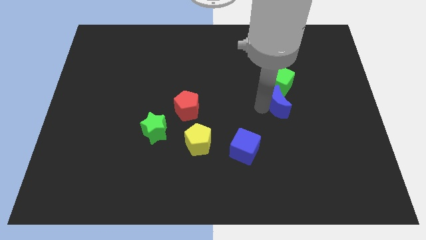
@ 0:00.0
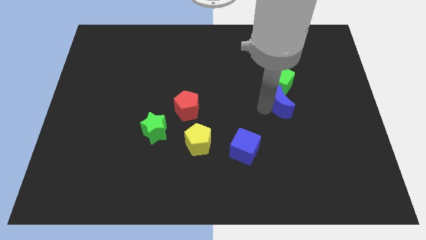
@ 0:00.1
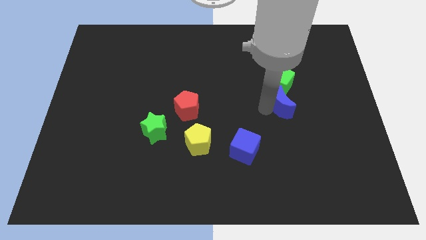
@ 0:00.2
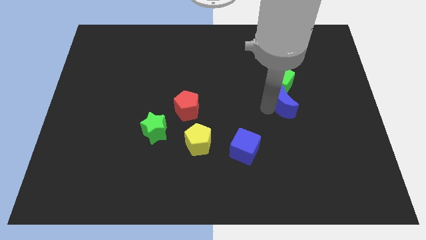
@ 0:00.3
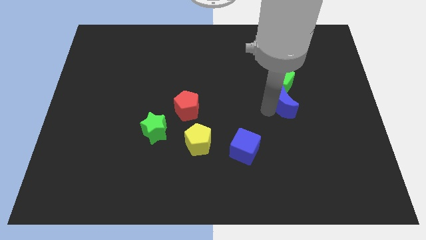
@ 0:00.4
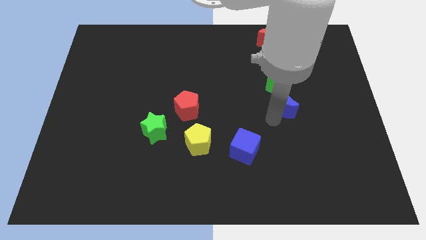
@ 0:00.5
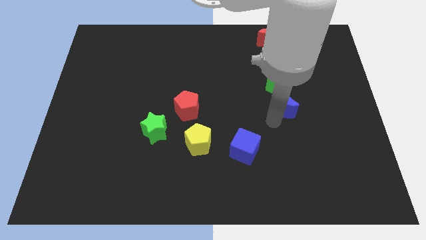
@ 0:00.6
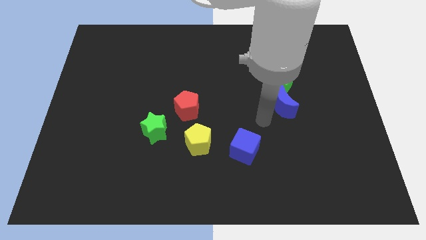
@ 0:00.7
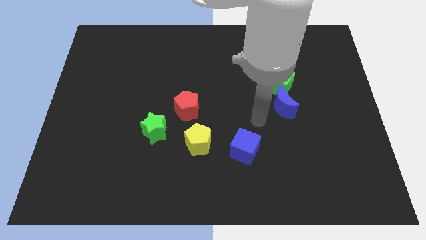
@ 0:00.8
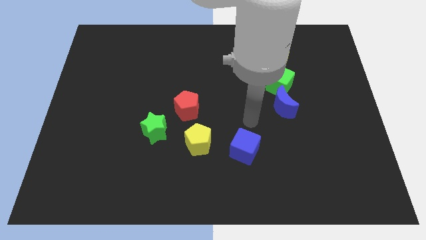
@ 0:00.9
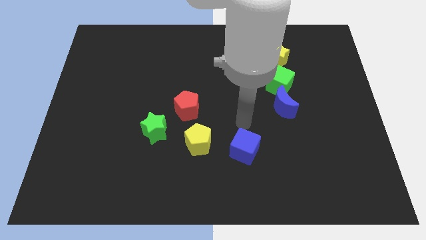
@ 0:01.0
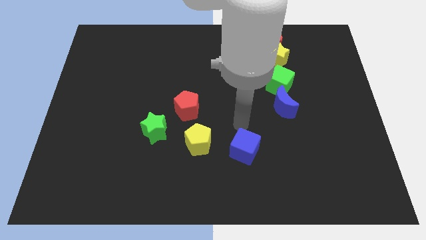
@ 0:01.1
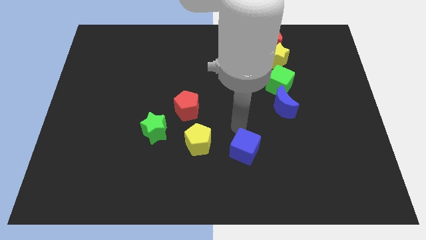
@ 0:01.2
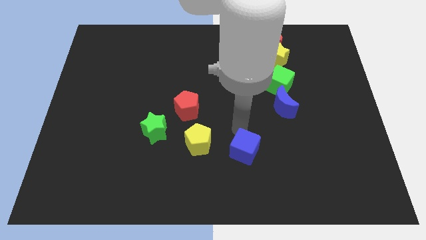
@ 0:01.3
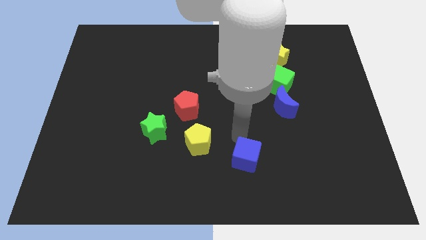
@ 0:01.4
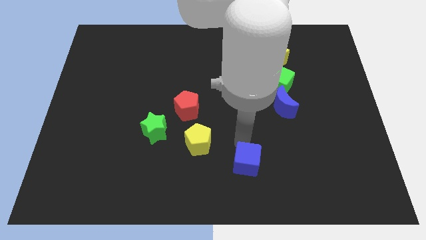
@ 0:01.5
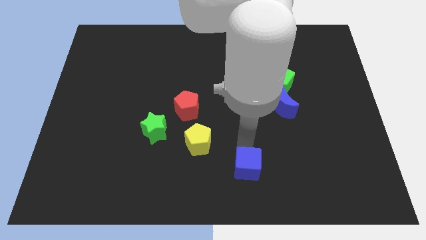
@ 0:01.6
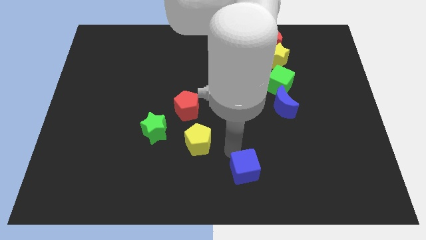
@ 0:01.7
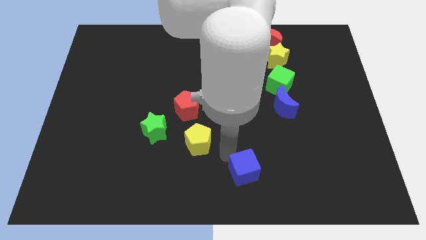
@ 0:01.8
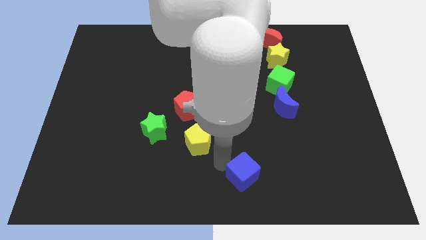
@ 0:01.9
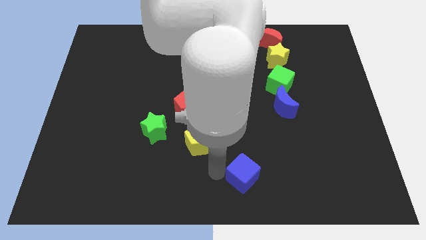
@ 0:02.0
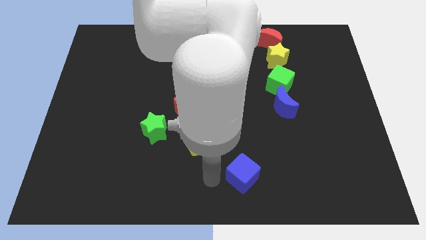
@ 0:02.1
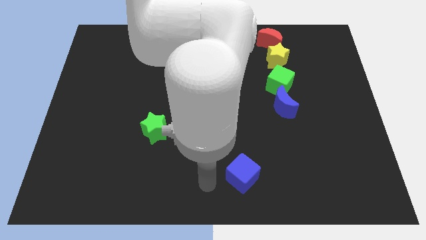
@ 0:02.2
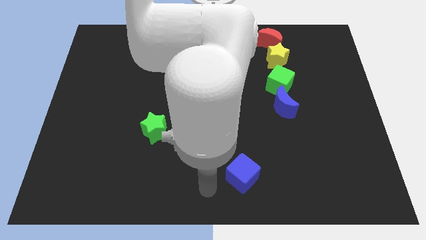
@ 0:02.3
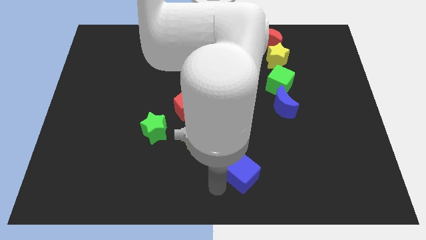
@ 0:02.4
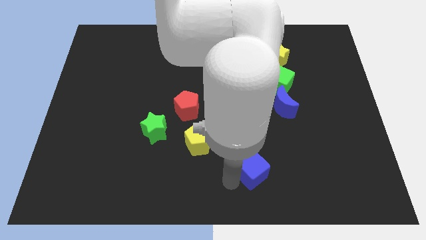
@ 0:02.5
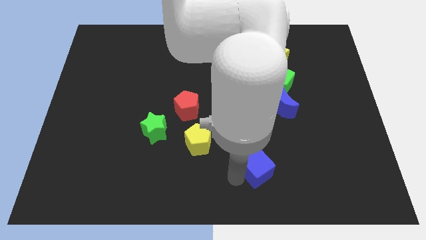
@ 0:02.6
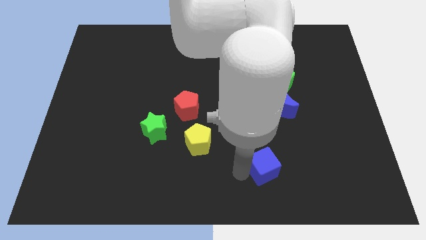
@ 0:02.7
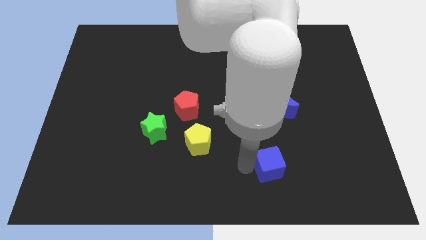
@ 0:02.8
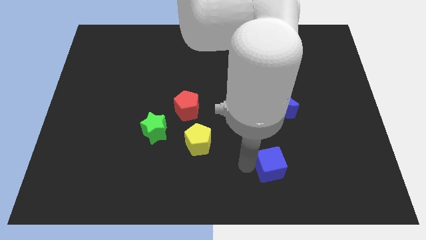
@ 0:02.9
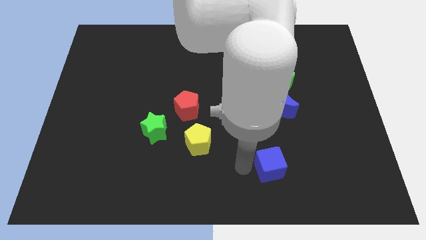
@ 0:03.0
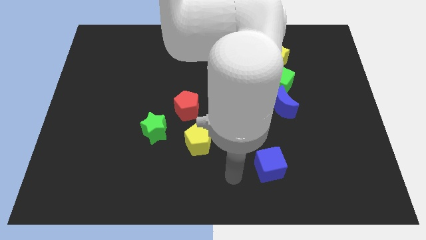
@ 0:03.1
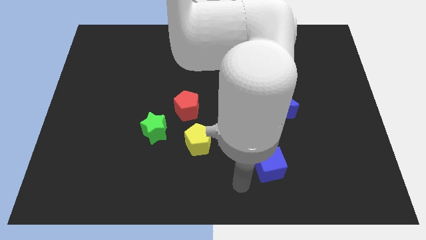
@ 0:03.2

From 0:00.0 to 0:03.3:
push the blue cube slightly to the right side

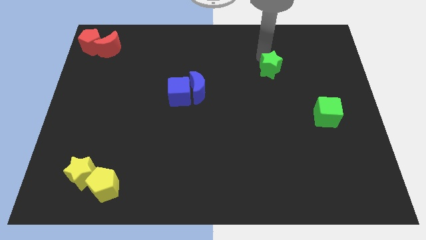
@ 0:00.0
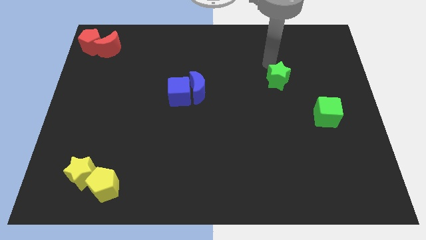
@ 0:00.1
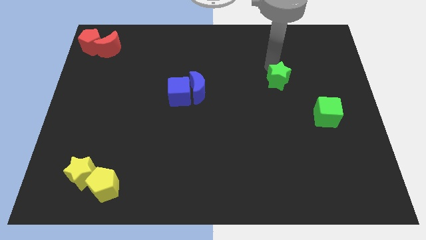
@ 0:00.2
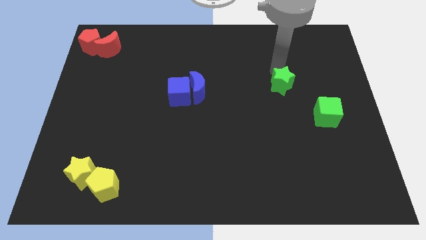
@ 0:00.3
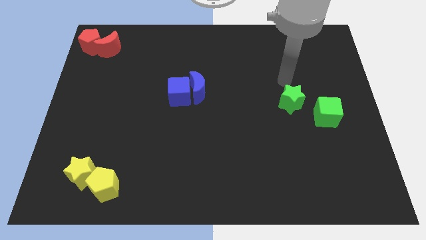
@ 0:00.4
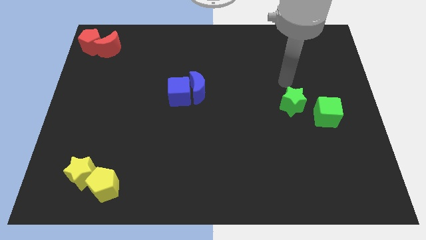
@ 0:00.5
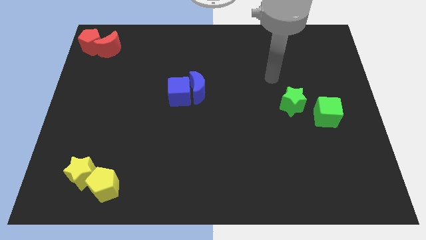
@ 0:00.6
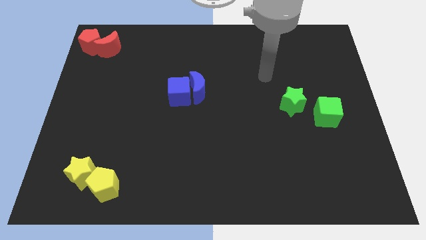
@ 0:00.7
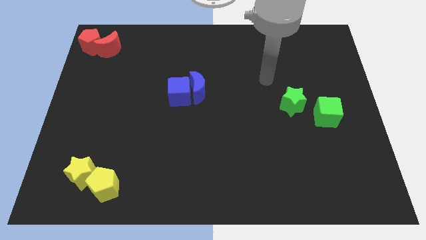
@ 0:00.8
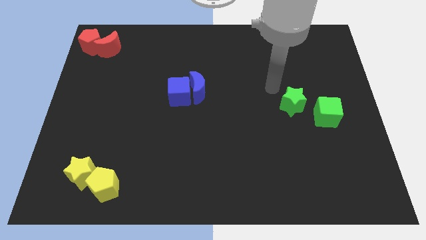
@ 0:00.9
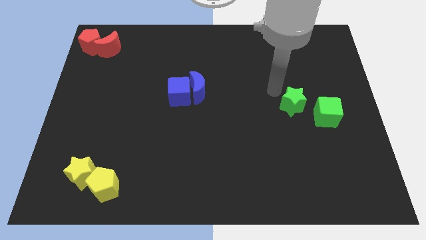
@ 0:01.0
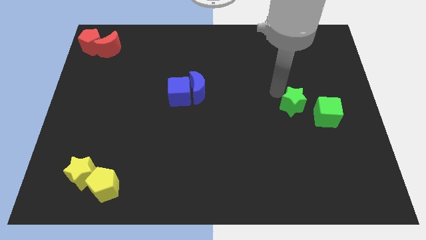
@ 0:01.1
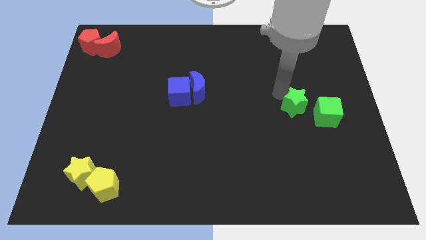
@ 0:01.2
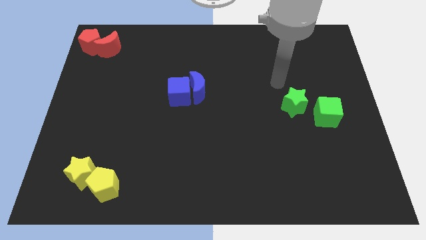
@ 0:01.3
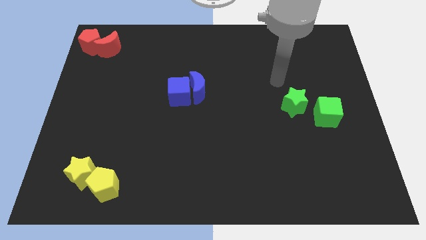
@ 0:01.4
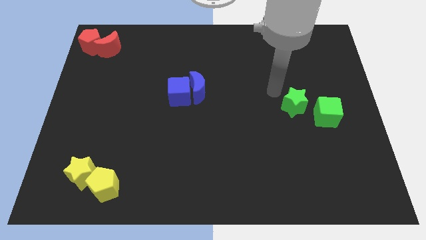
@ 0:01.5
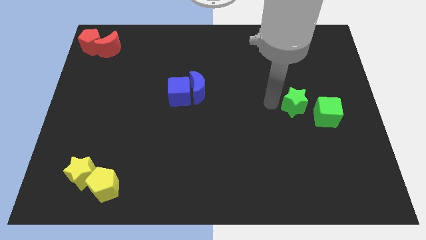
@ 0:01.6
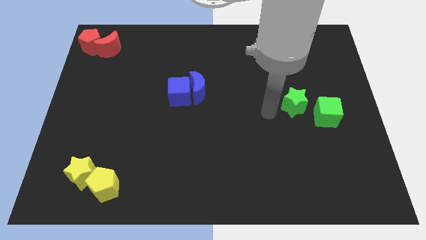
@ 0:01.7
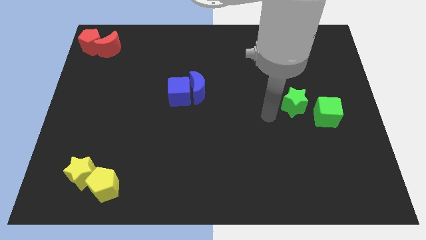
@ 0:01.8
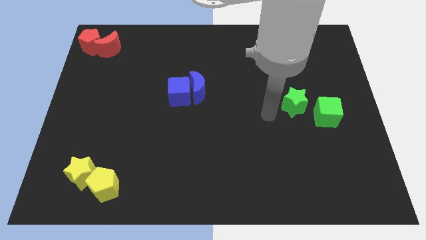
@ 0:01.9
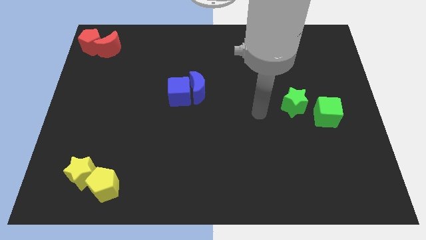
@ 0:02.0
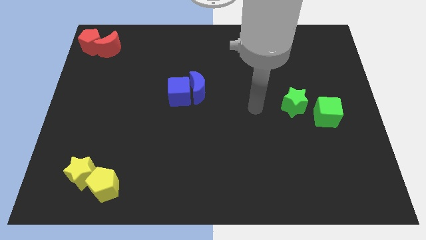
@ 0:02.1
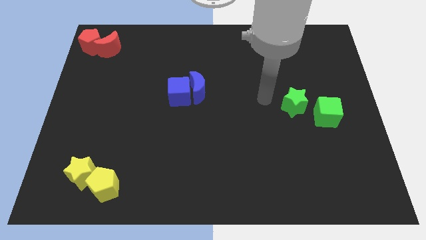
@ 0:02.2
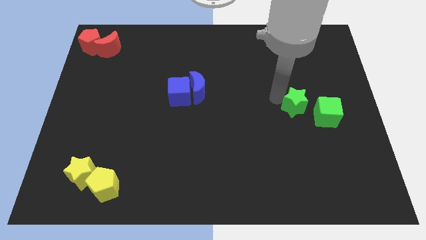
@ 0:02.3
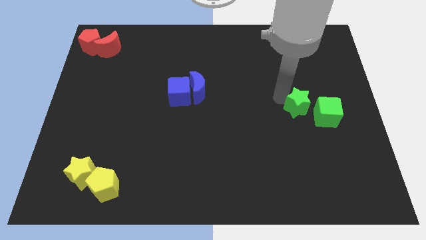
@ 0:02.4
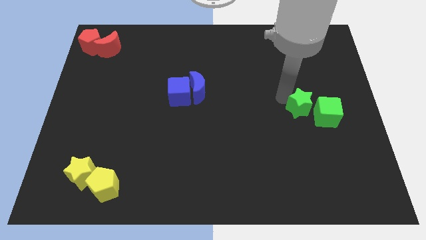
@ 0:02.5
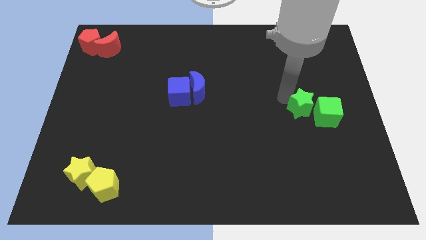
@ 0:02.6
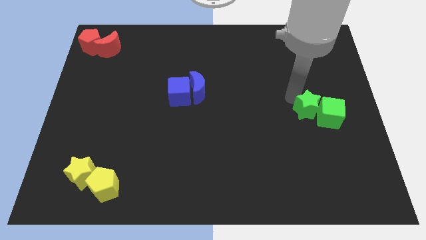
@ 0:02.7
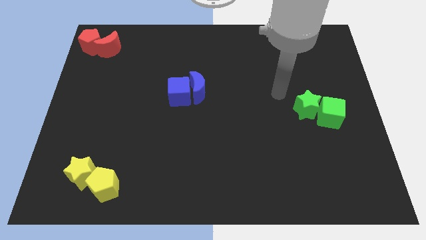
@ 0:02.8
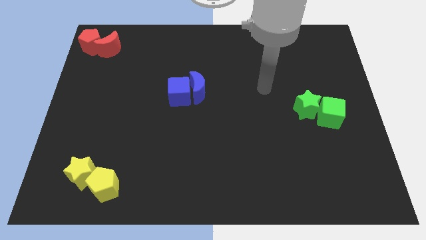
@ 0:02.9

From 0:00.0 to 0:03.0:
push the green star into the green cube

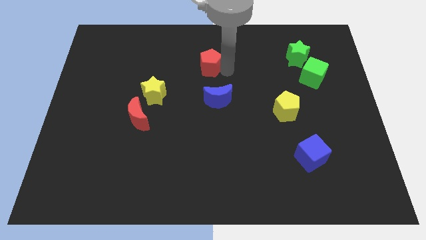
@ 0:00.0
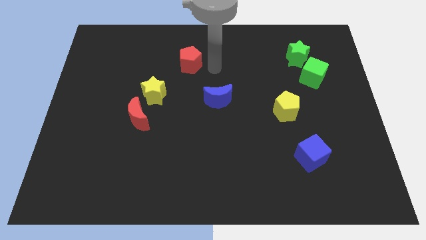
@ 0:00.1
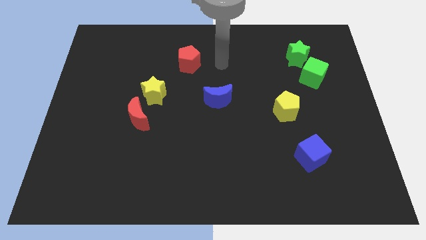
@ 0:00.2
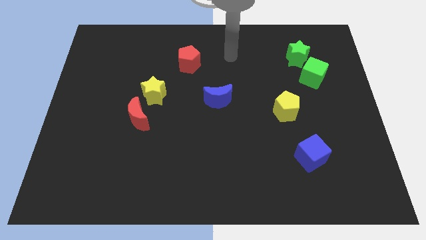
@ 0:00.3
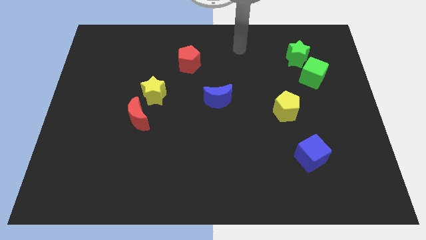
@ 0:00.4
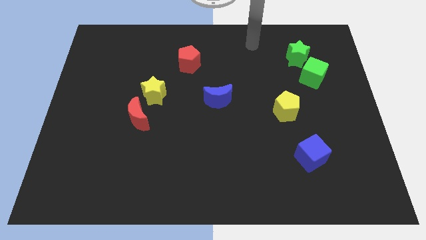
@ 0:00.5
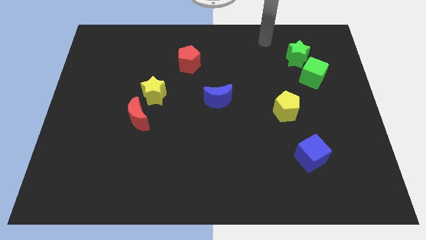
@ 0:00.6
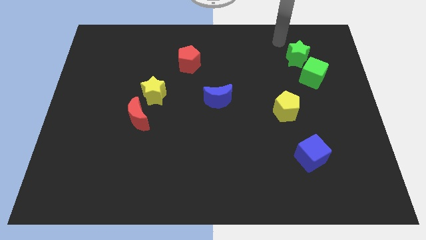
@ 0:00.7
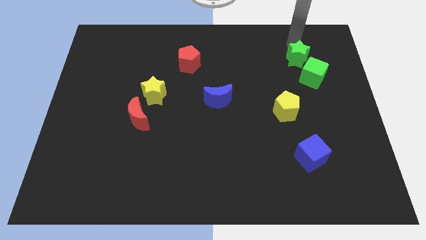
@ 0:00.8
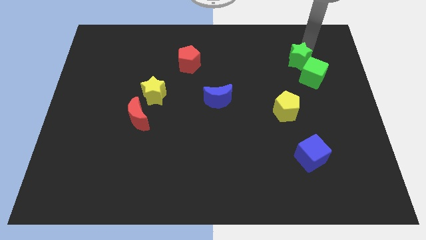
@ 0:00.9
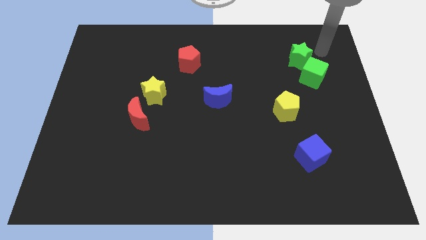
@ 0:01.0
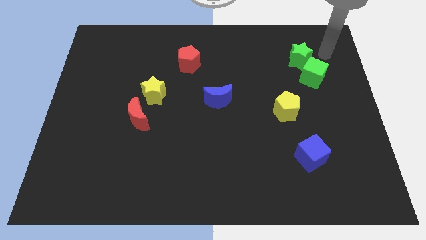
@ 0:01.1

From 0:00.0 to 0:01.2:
move your arm near the green star

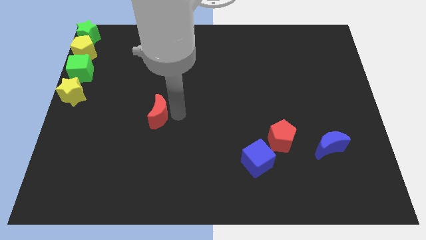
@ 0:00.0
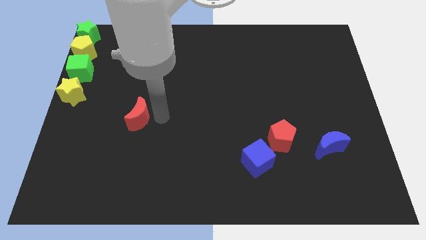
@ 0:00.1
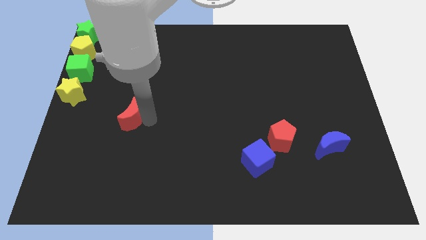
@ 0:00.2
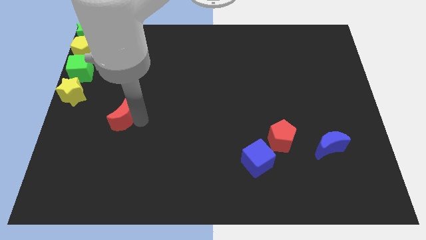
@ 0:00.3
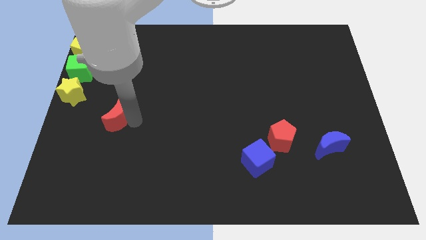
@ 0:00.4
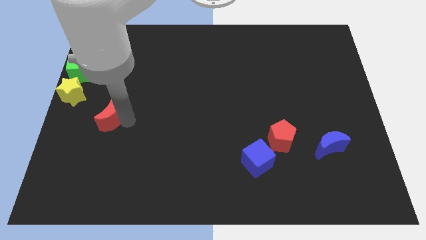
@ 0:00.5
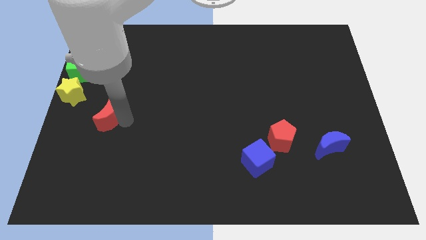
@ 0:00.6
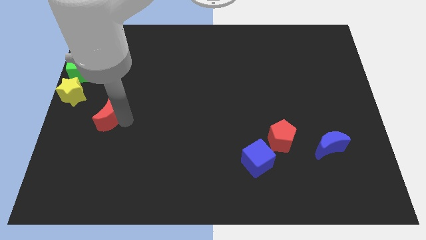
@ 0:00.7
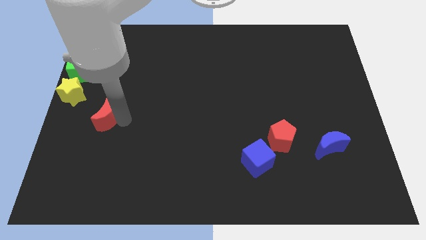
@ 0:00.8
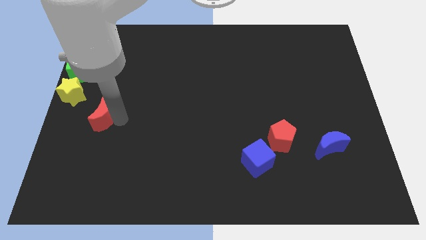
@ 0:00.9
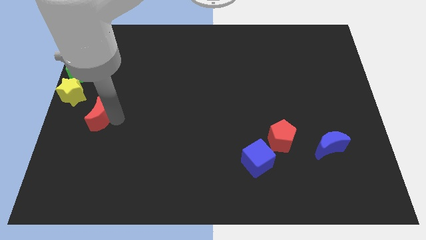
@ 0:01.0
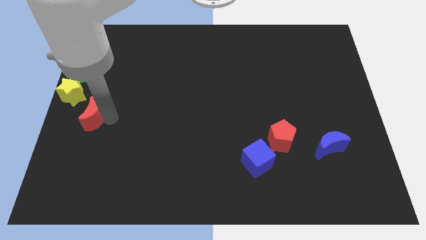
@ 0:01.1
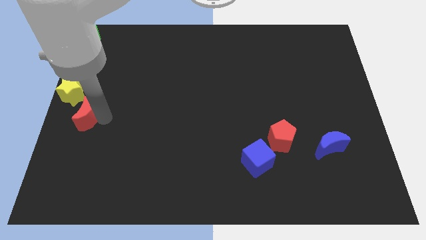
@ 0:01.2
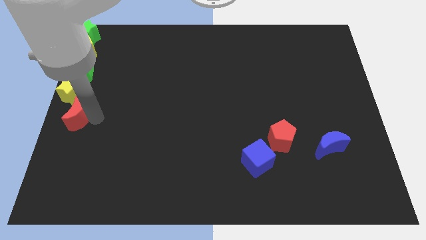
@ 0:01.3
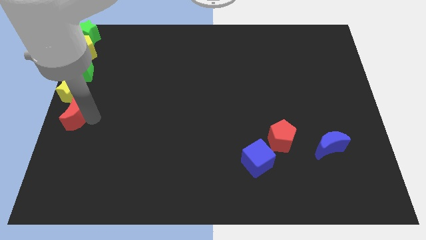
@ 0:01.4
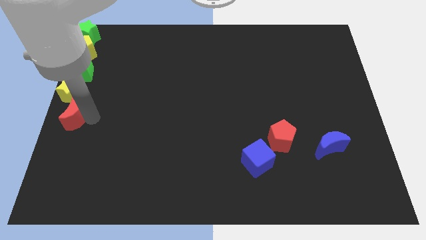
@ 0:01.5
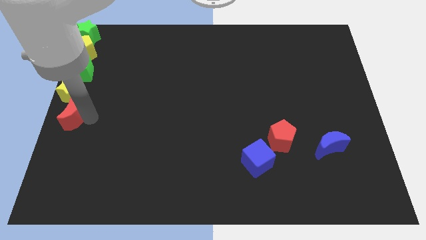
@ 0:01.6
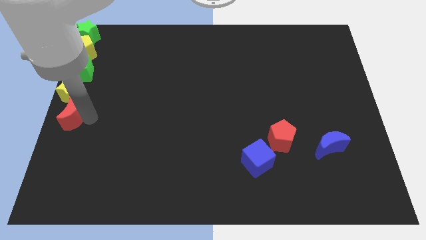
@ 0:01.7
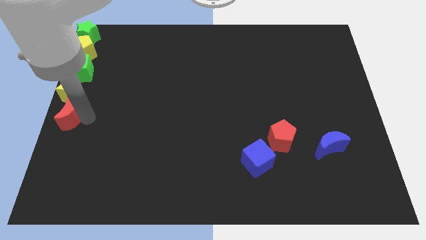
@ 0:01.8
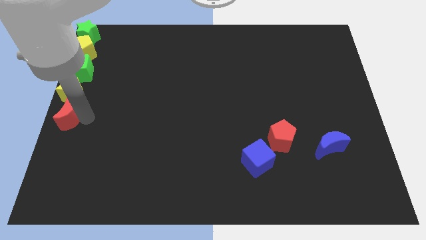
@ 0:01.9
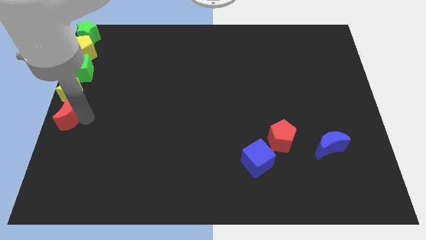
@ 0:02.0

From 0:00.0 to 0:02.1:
drag the red moon vertical to yellow star
